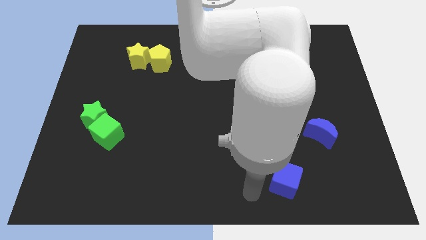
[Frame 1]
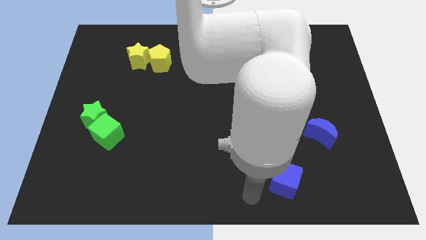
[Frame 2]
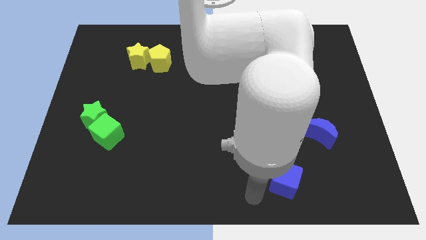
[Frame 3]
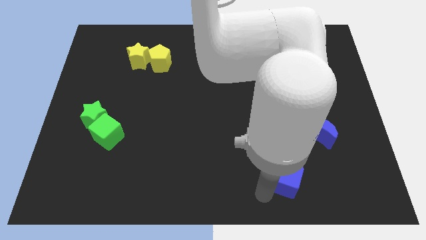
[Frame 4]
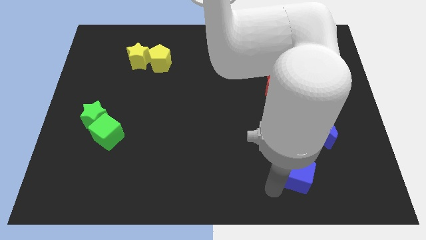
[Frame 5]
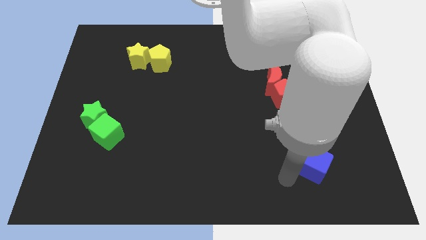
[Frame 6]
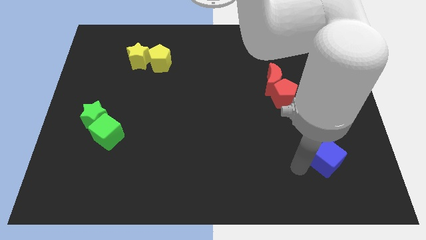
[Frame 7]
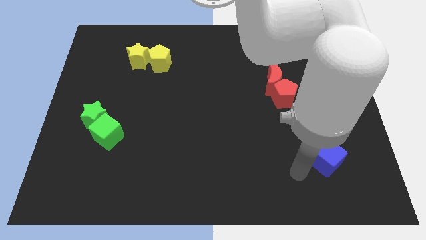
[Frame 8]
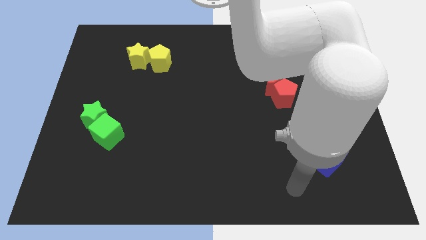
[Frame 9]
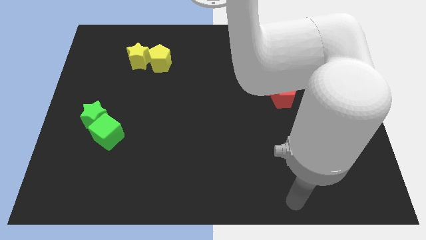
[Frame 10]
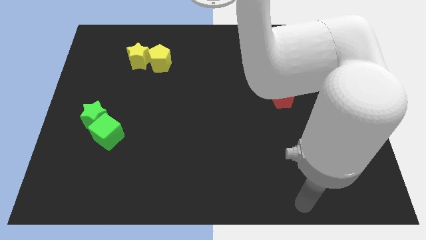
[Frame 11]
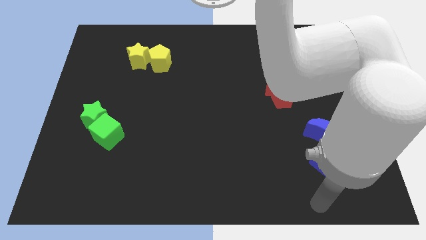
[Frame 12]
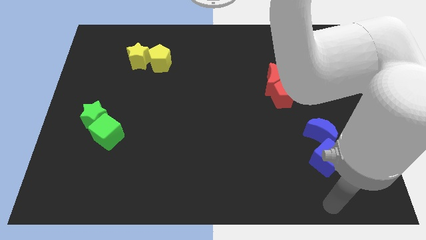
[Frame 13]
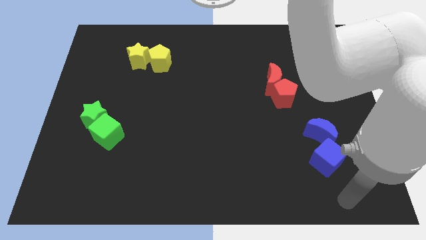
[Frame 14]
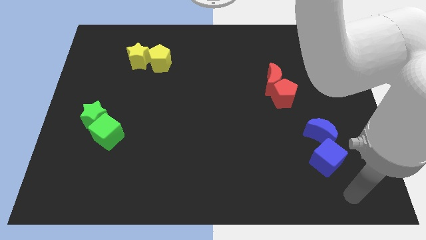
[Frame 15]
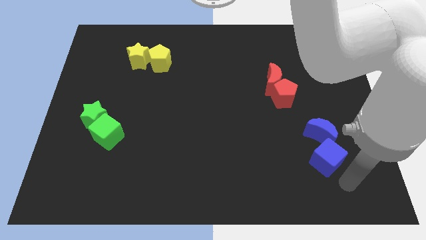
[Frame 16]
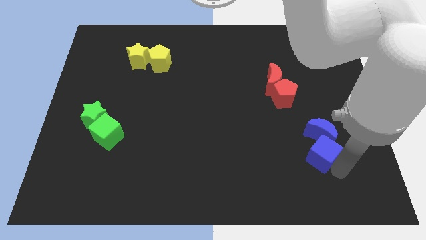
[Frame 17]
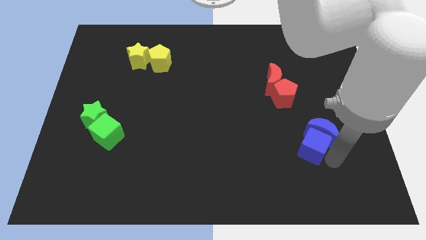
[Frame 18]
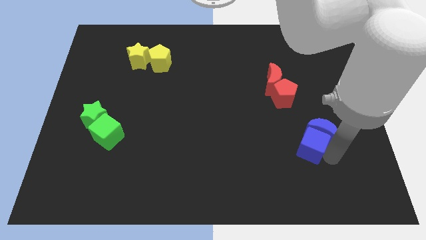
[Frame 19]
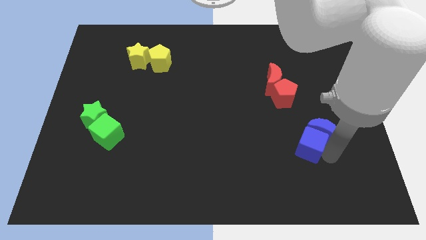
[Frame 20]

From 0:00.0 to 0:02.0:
move the blue cube into the blue crescent

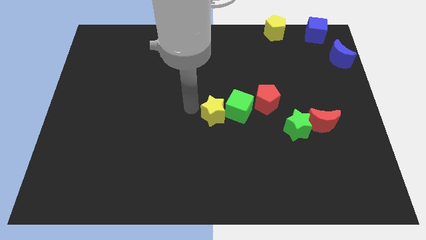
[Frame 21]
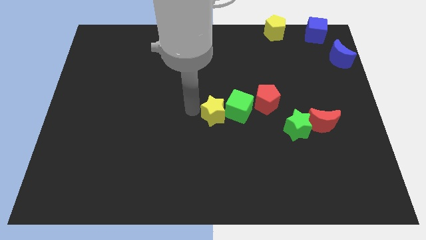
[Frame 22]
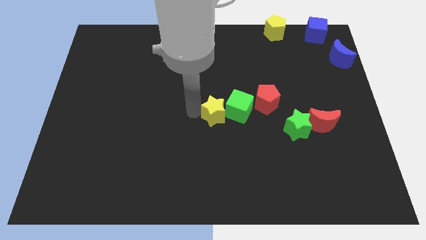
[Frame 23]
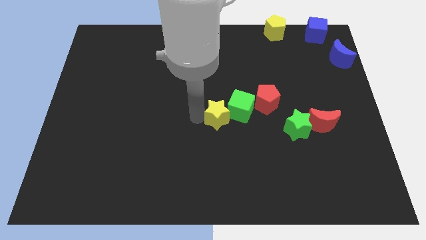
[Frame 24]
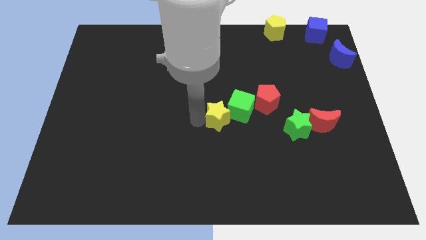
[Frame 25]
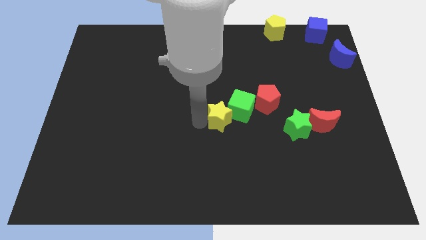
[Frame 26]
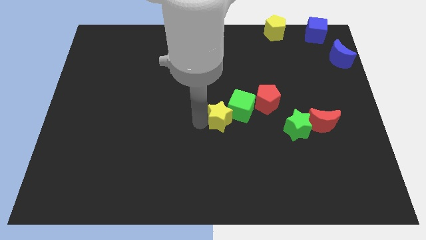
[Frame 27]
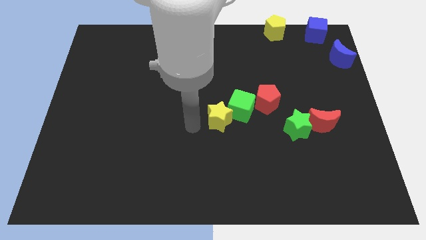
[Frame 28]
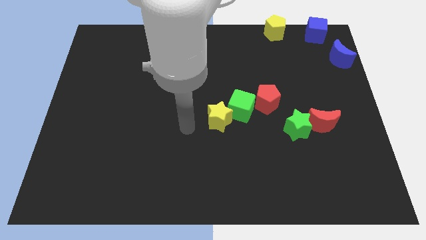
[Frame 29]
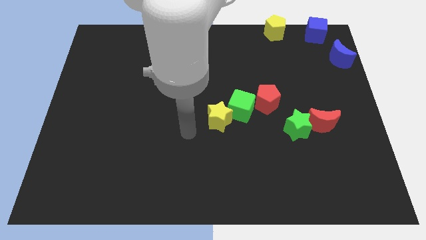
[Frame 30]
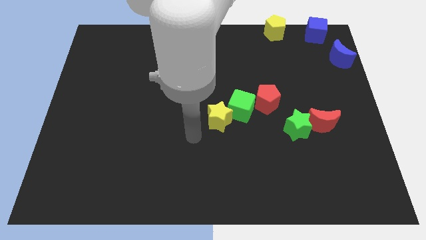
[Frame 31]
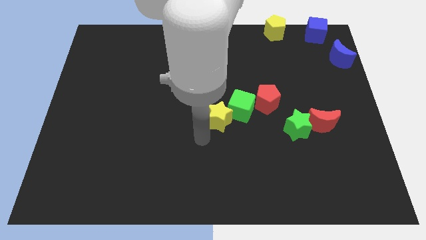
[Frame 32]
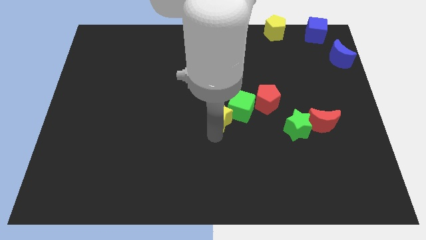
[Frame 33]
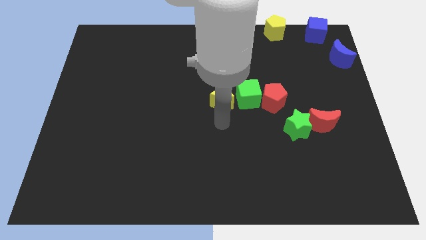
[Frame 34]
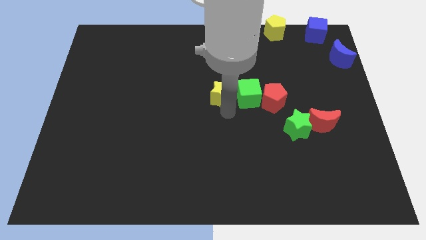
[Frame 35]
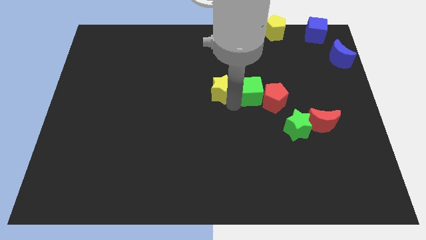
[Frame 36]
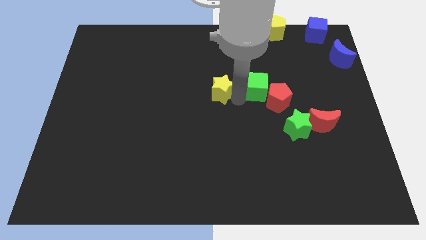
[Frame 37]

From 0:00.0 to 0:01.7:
move the yellow star towards the center

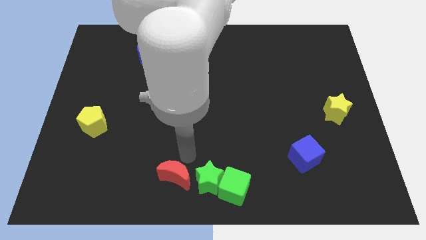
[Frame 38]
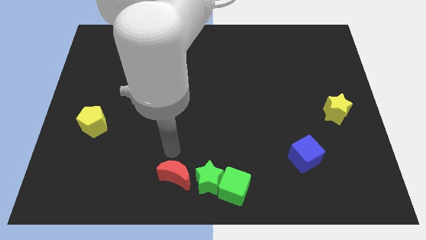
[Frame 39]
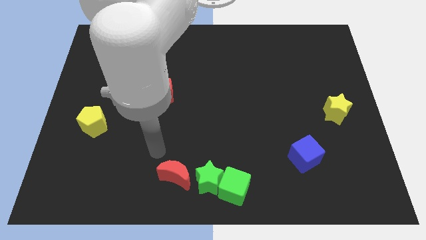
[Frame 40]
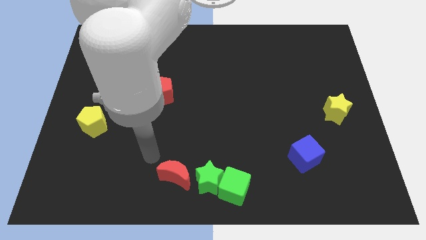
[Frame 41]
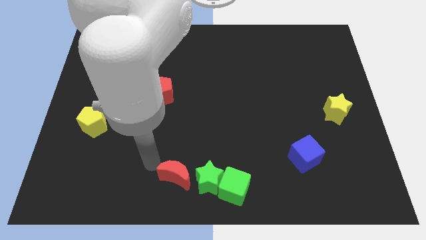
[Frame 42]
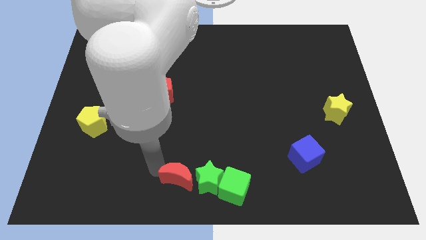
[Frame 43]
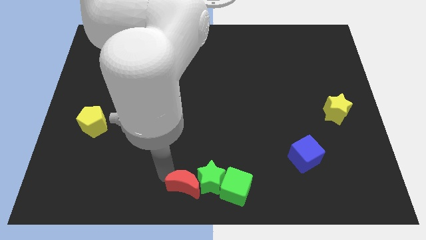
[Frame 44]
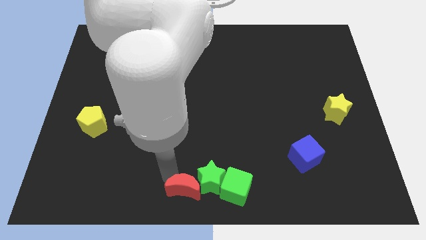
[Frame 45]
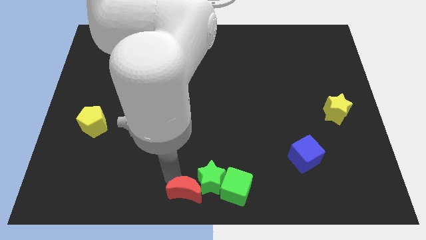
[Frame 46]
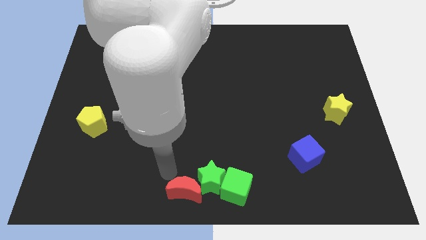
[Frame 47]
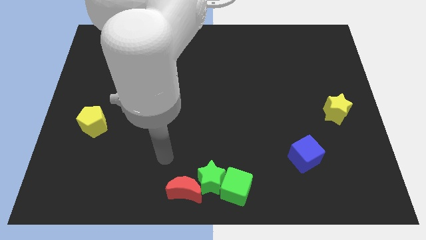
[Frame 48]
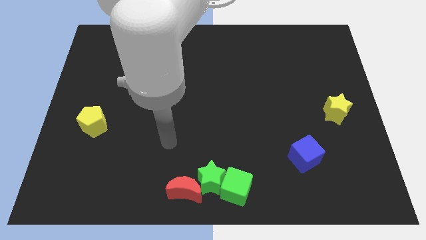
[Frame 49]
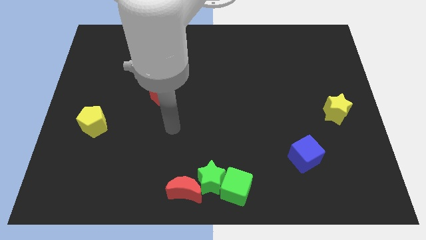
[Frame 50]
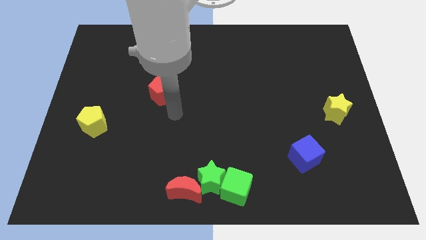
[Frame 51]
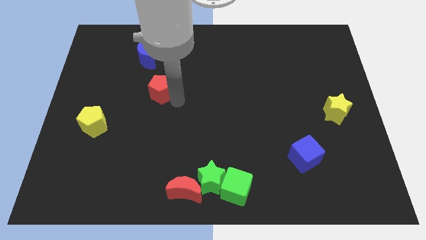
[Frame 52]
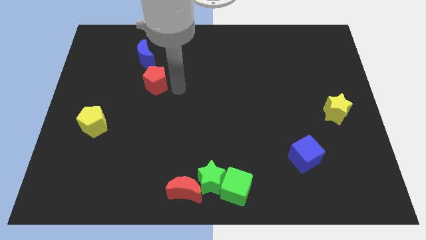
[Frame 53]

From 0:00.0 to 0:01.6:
slide the red moon into the green star

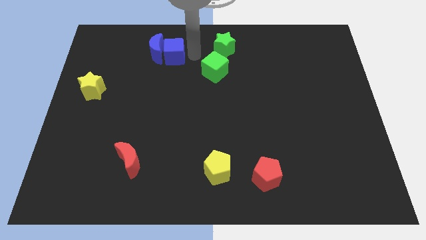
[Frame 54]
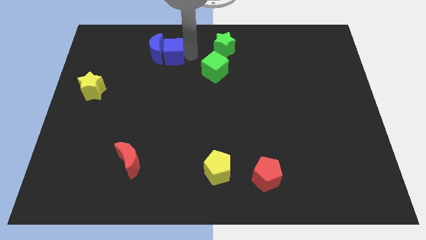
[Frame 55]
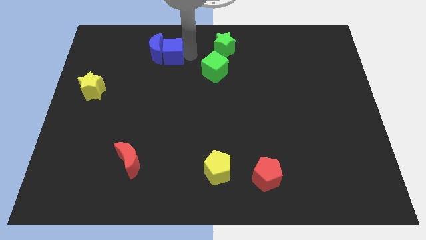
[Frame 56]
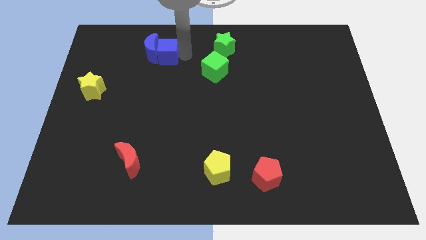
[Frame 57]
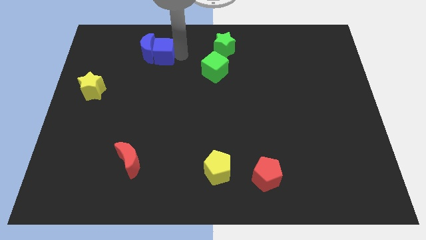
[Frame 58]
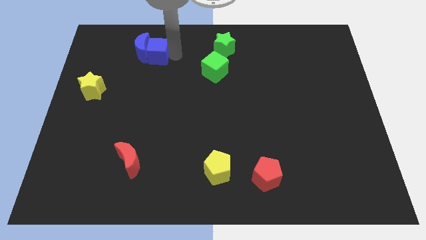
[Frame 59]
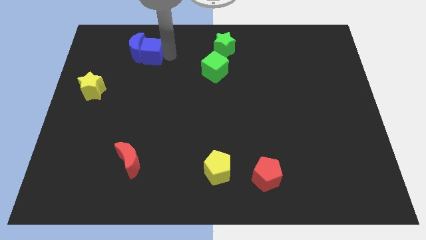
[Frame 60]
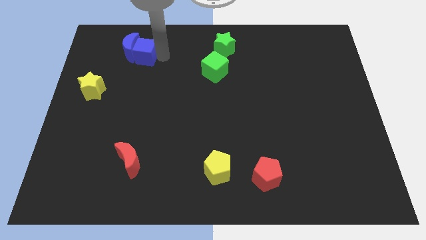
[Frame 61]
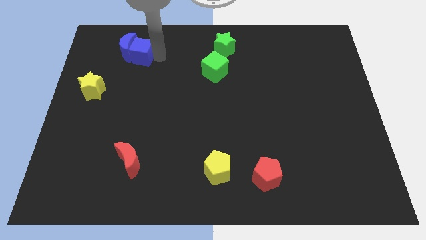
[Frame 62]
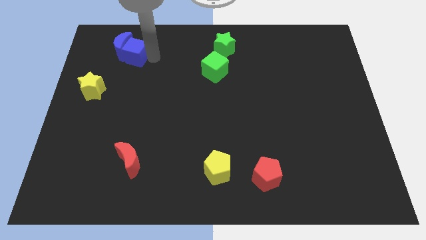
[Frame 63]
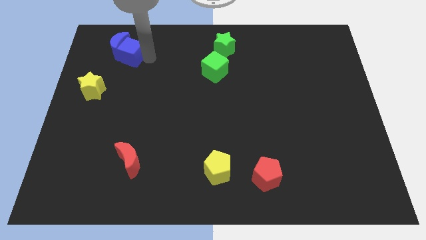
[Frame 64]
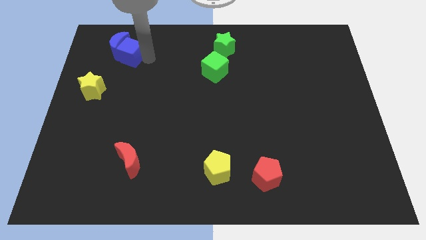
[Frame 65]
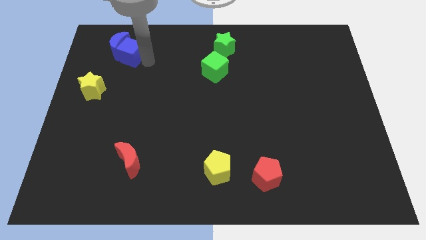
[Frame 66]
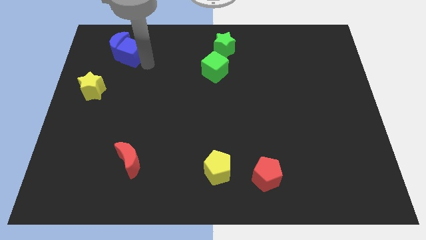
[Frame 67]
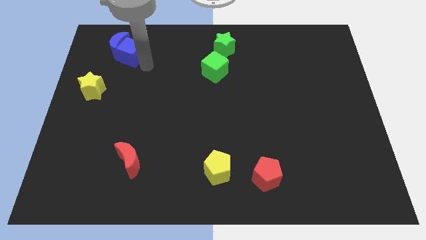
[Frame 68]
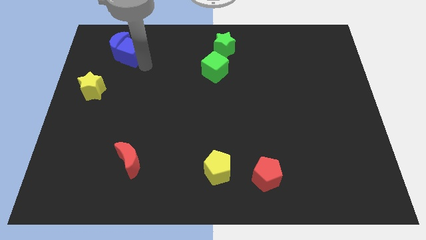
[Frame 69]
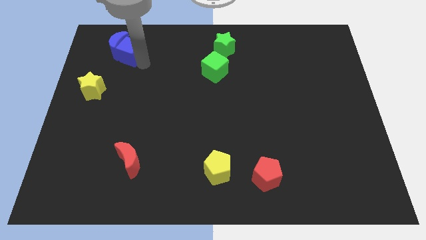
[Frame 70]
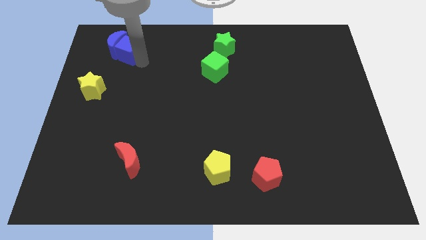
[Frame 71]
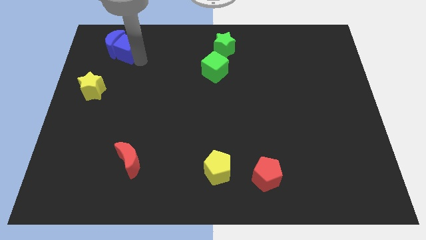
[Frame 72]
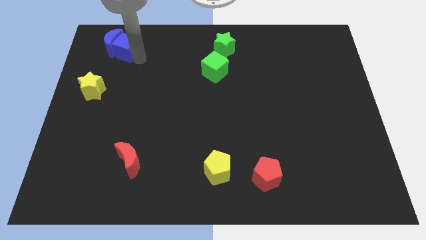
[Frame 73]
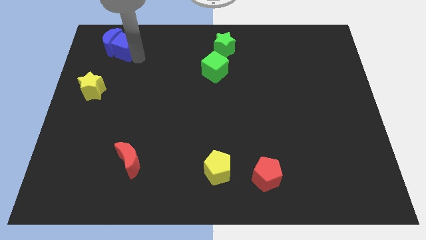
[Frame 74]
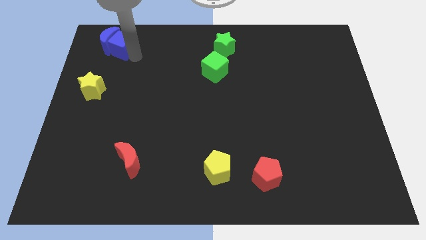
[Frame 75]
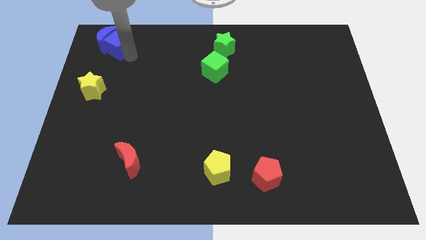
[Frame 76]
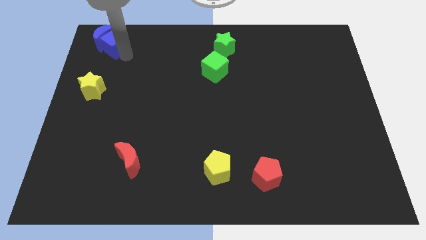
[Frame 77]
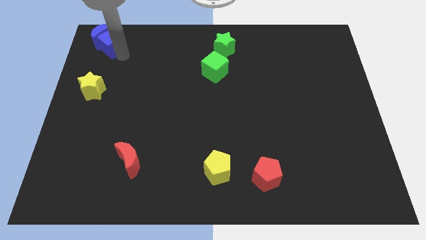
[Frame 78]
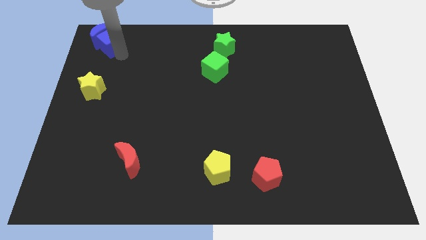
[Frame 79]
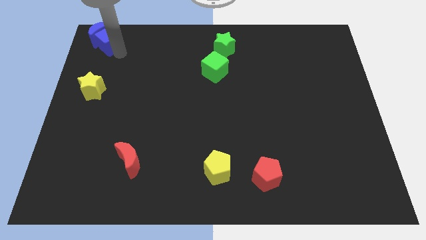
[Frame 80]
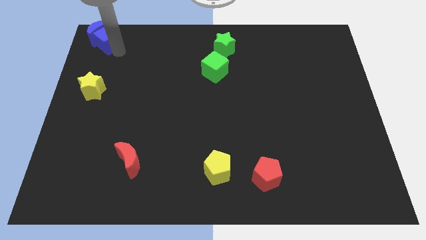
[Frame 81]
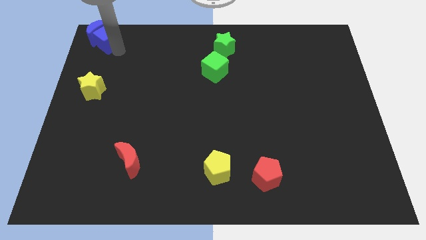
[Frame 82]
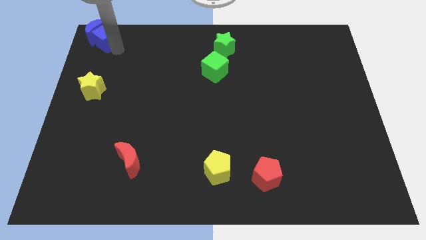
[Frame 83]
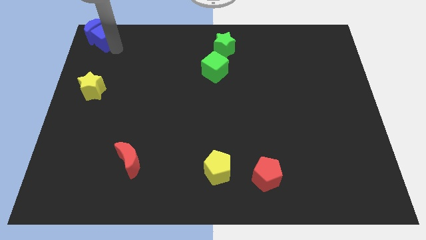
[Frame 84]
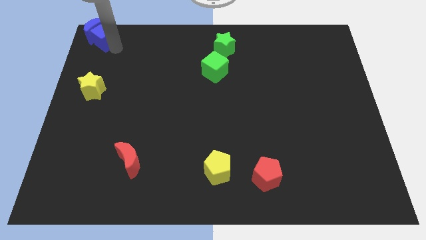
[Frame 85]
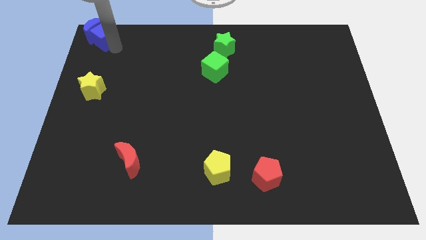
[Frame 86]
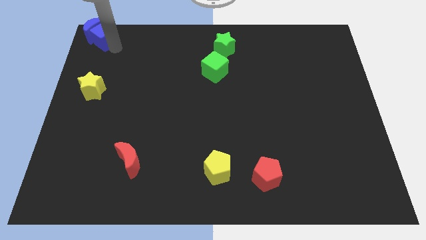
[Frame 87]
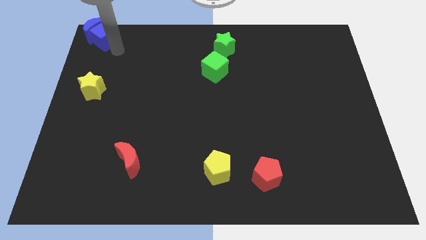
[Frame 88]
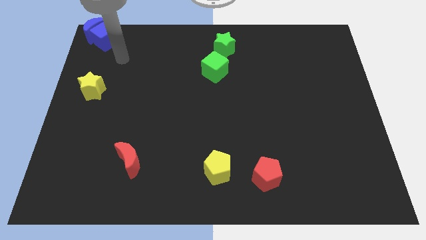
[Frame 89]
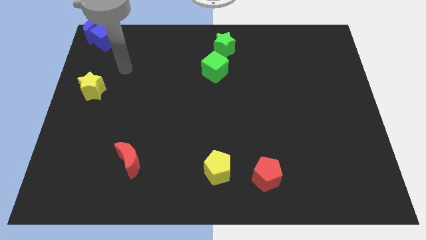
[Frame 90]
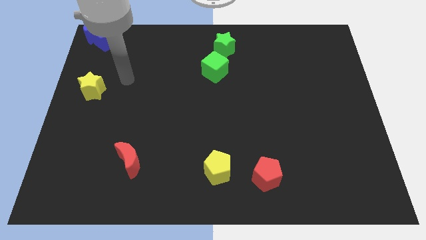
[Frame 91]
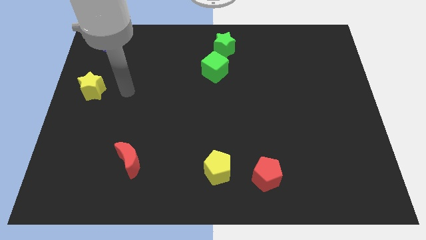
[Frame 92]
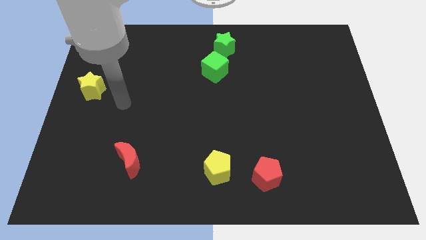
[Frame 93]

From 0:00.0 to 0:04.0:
move blue blocks to the top left corner of the board
